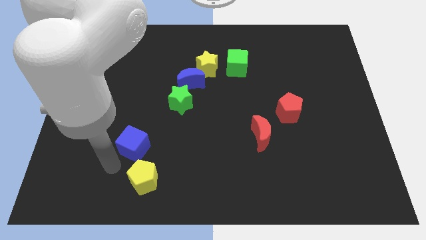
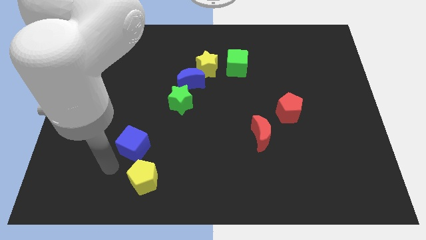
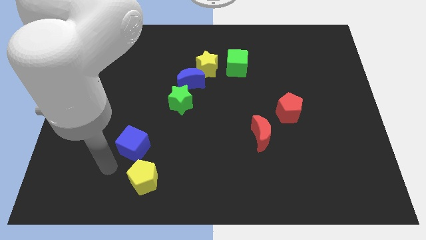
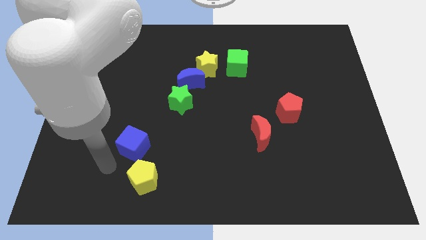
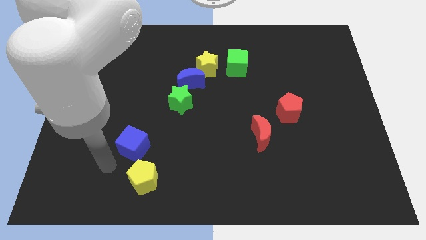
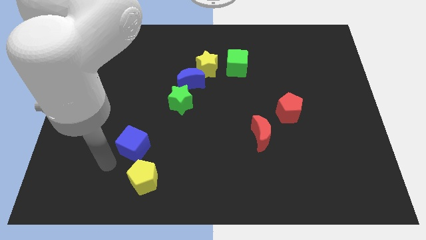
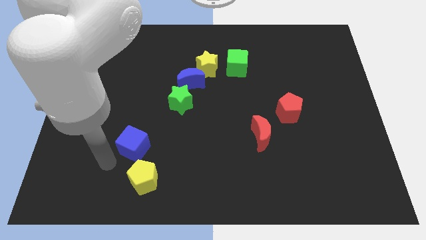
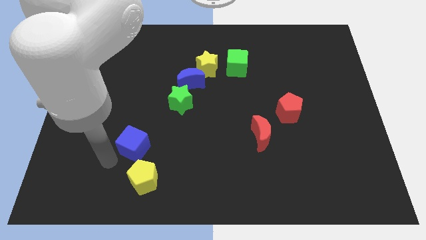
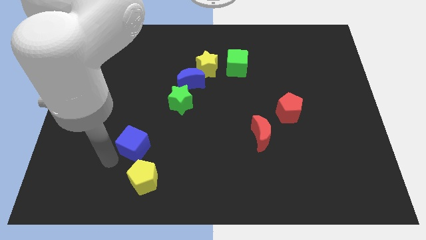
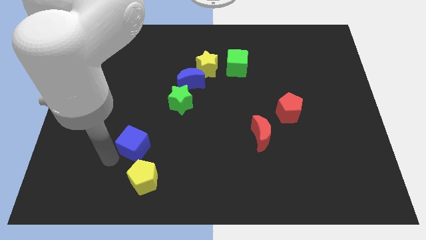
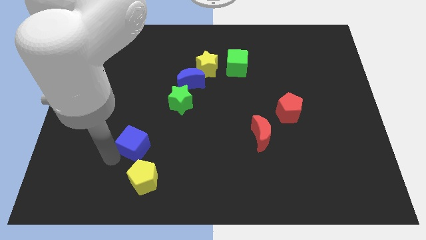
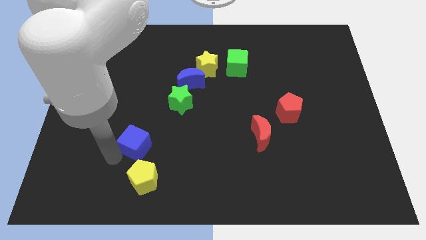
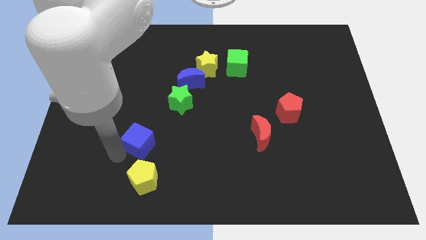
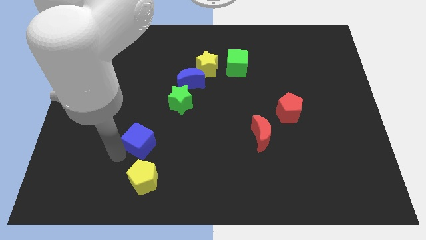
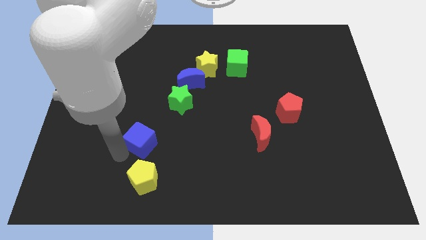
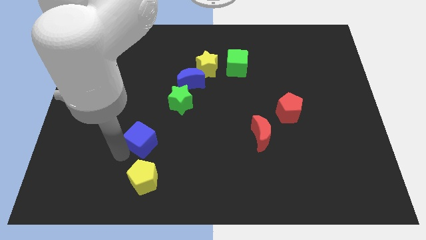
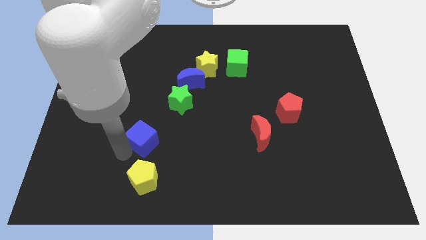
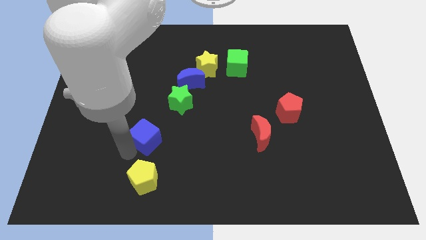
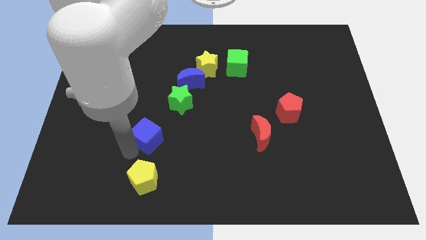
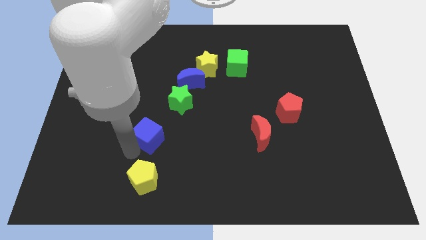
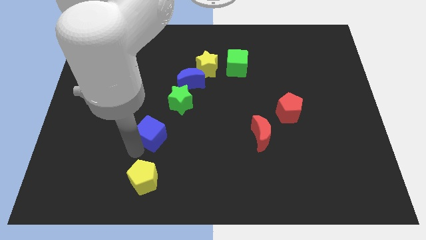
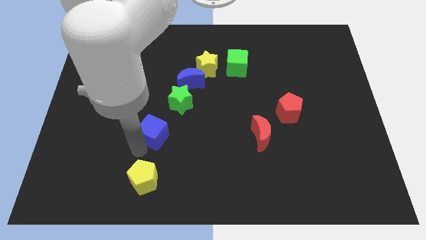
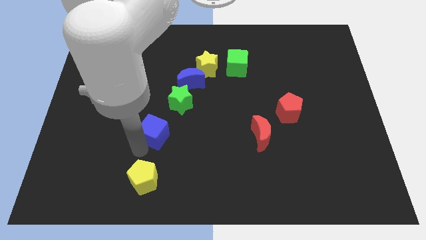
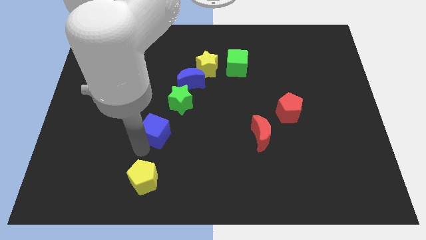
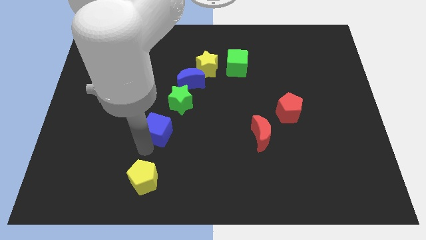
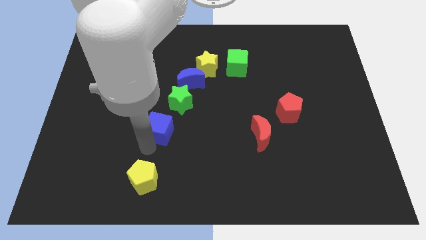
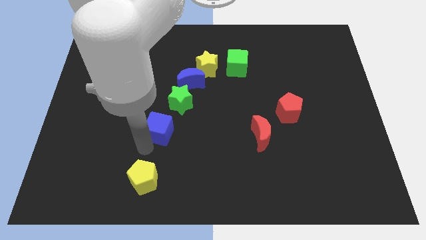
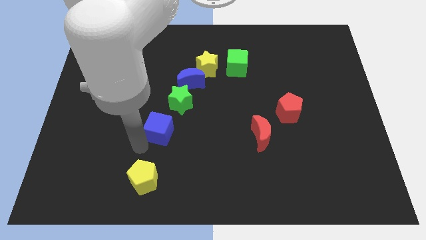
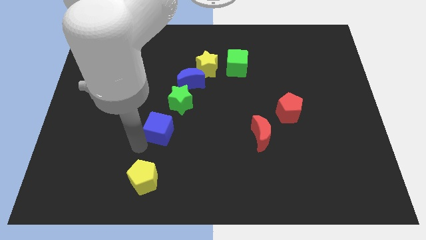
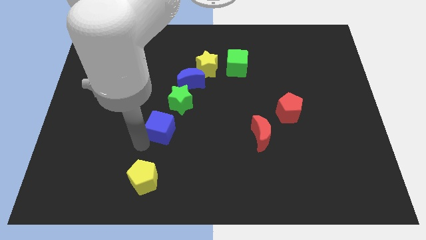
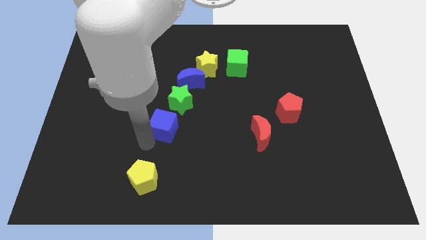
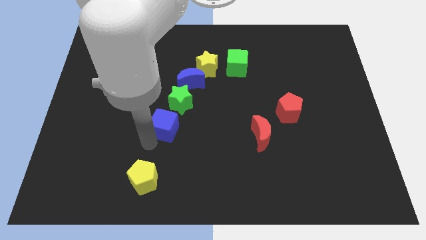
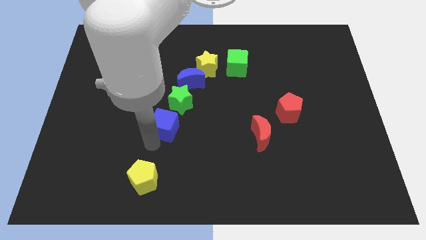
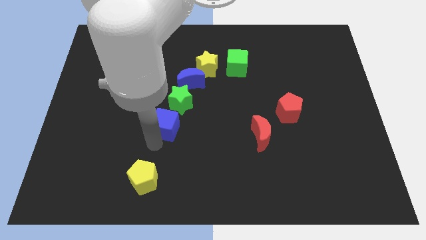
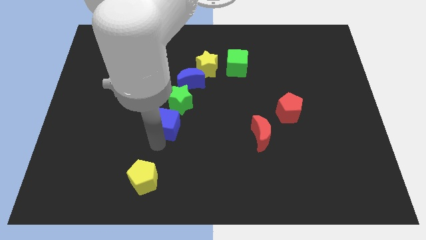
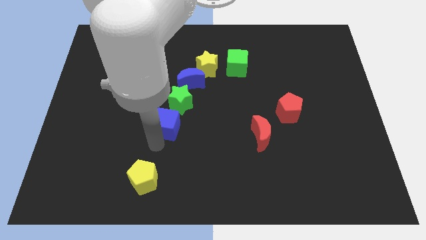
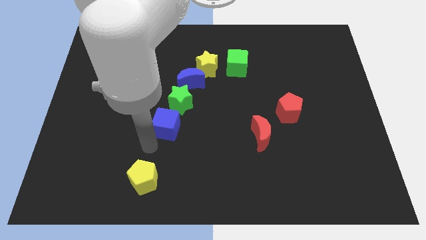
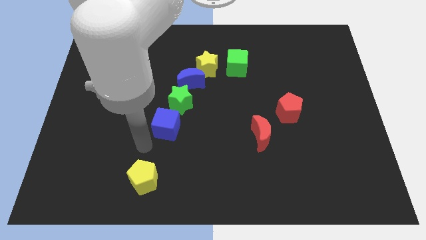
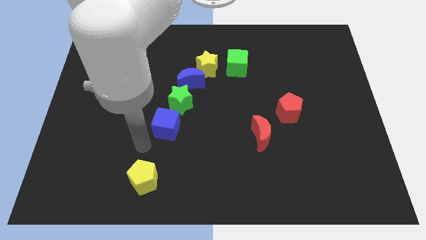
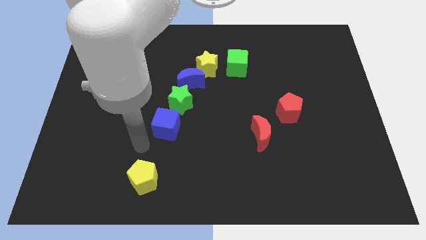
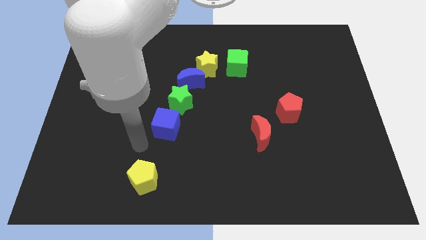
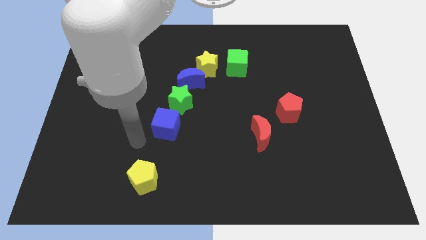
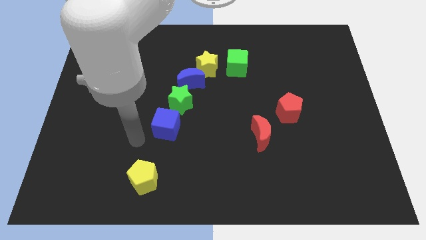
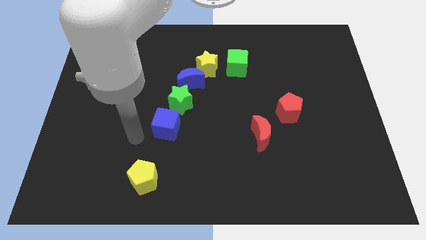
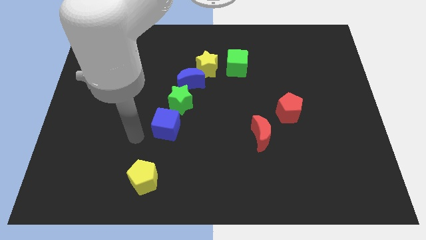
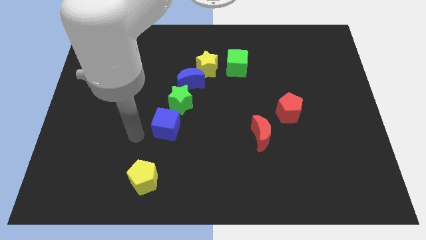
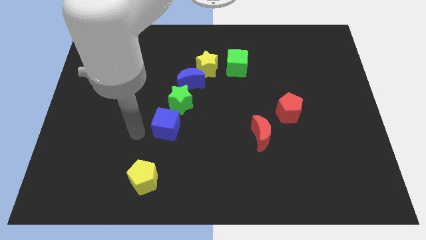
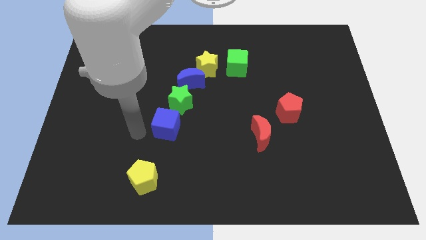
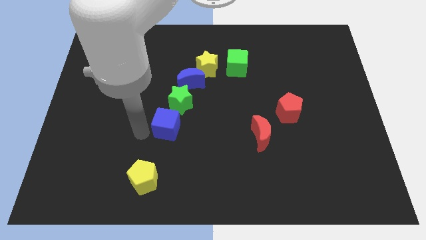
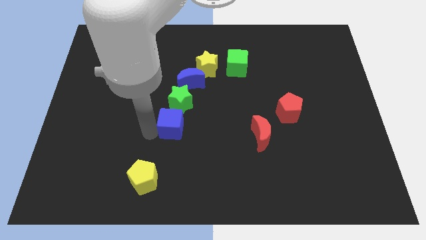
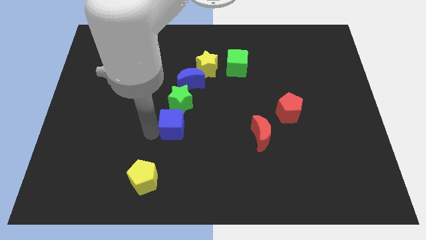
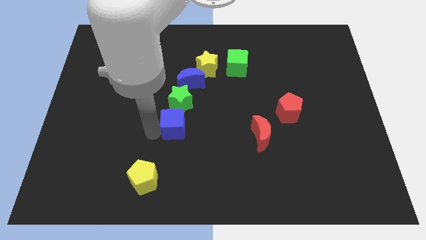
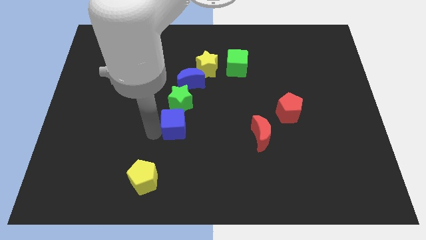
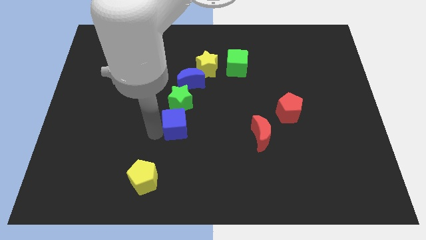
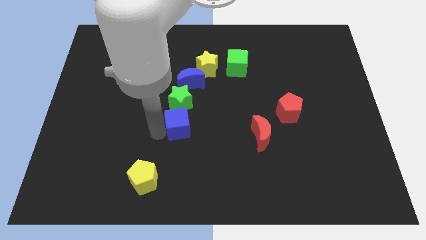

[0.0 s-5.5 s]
move the blue cube to the bottom of the green star

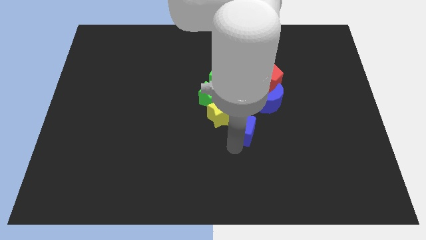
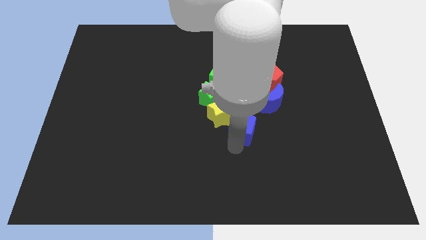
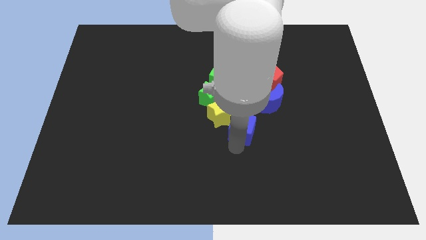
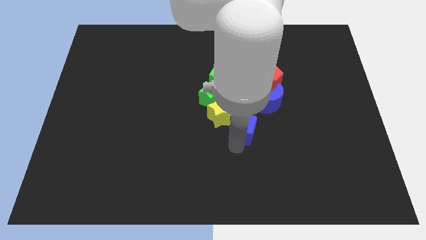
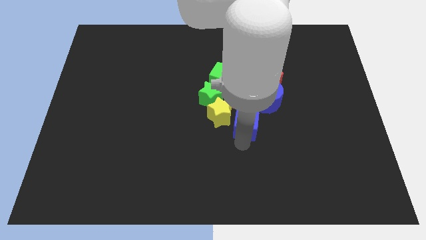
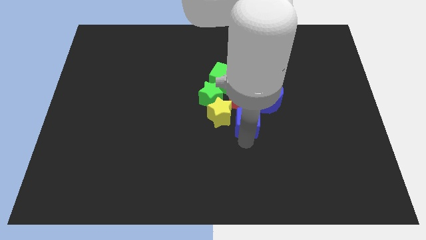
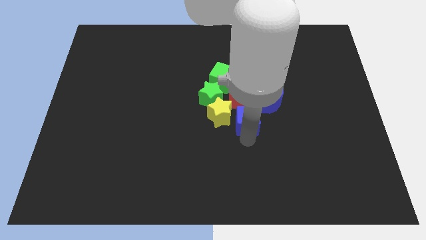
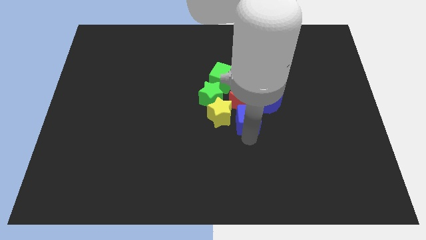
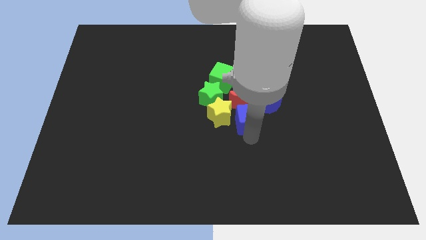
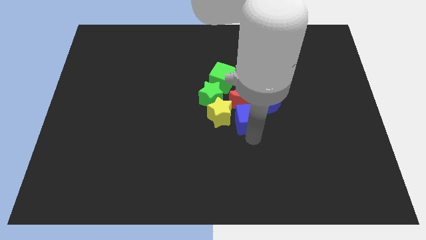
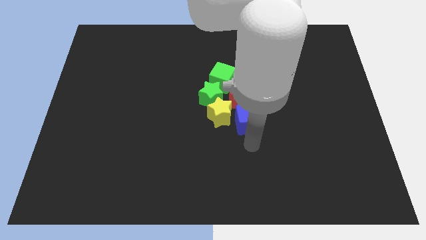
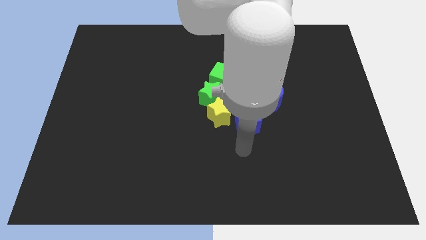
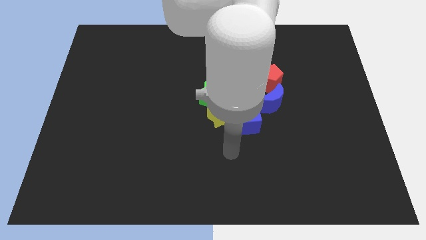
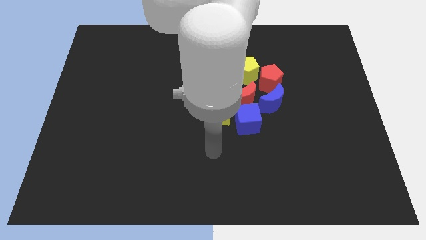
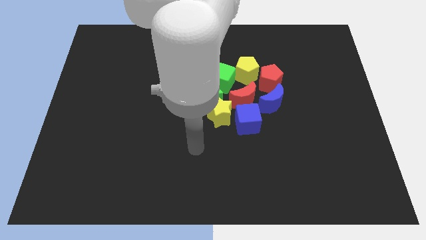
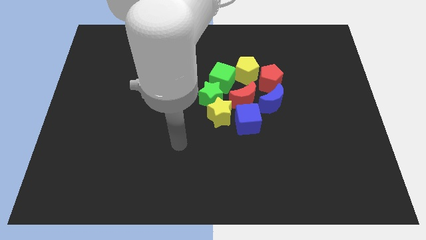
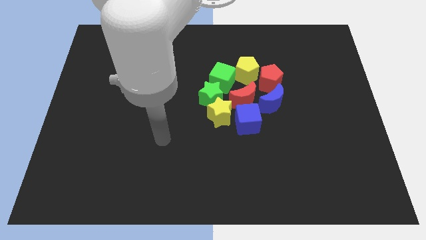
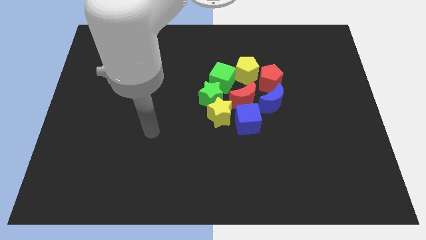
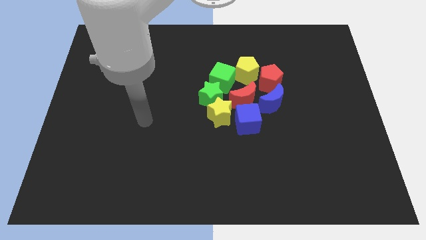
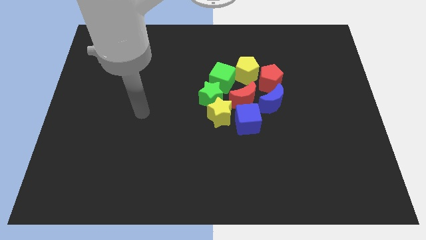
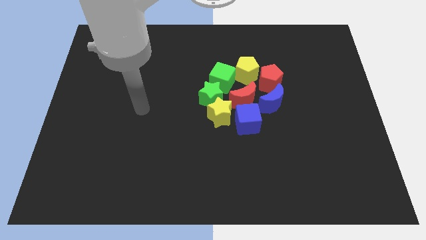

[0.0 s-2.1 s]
push the blue cube into the group of blocks

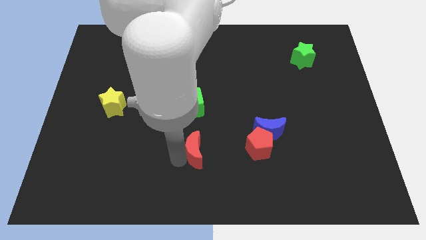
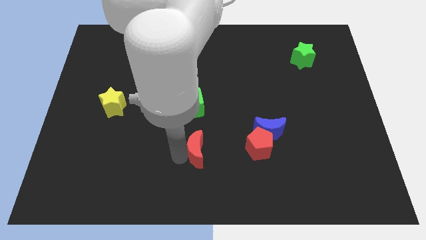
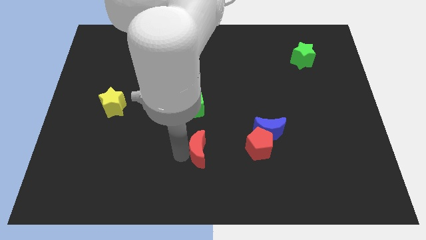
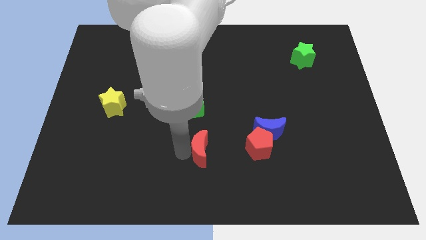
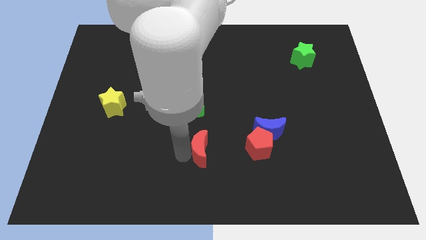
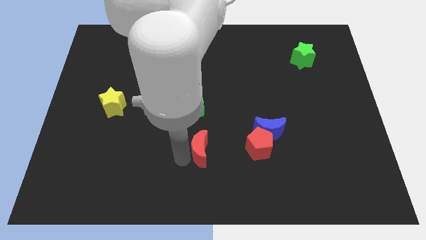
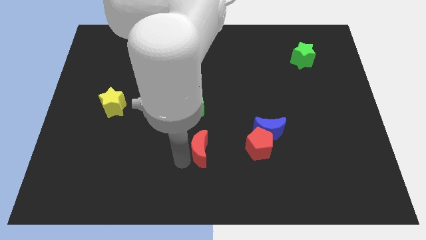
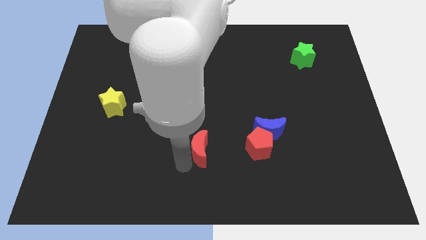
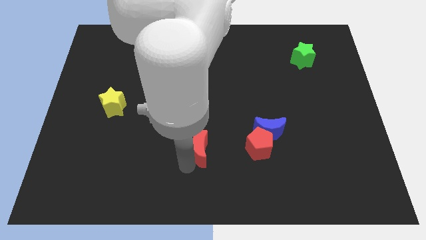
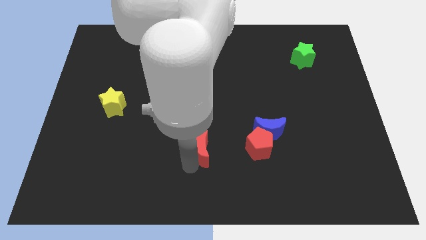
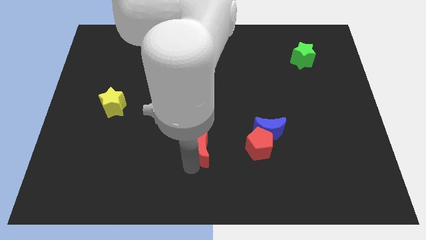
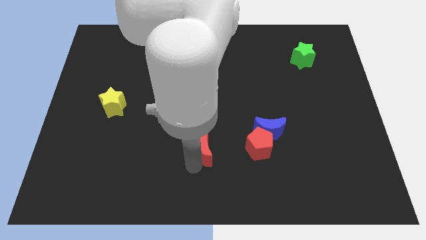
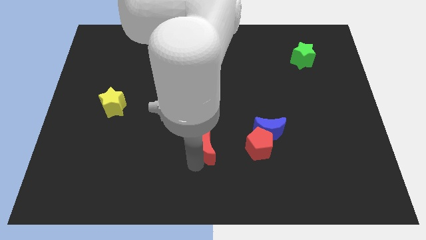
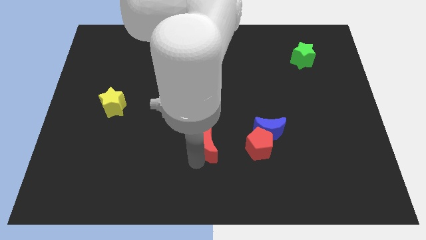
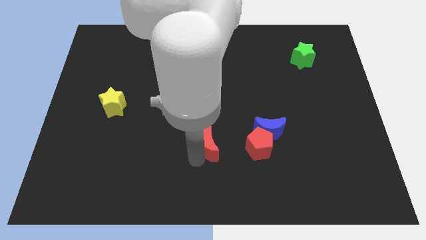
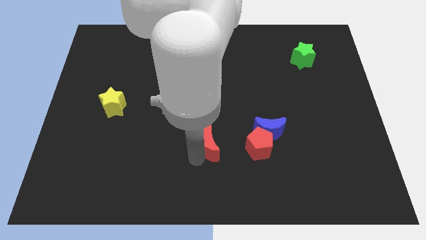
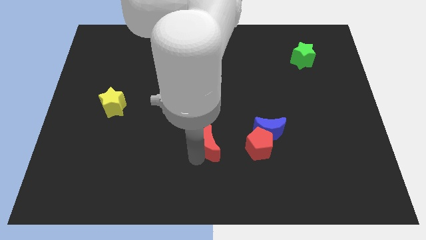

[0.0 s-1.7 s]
place the red moon below the green cube
